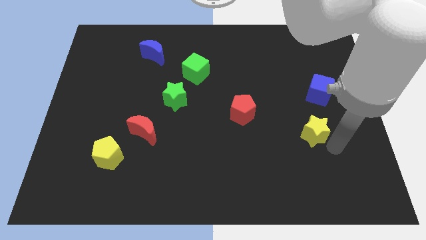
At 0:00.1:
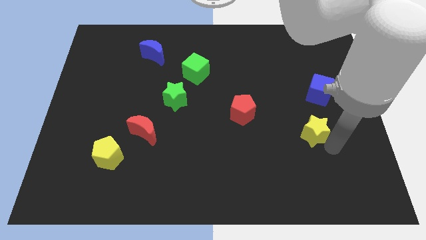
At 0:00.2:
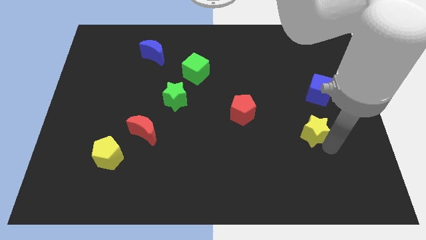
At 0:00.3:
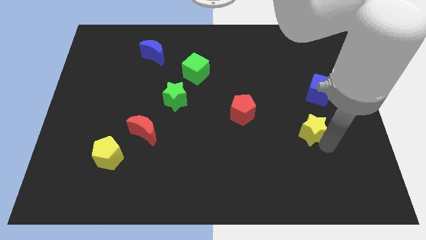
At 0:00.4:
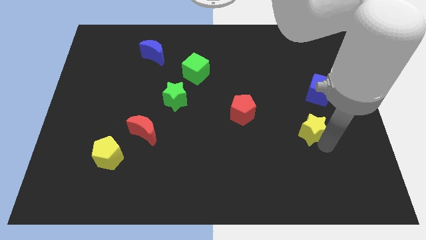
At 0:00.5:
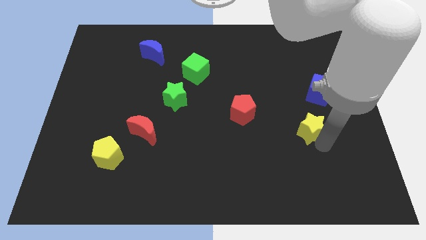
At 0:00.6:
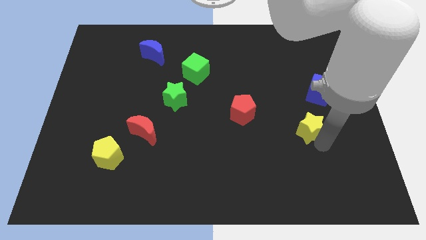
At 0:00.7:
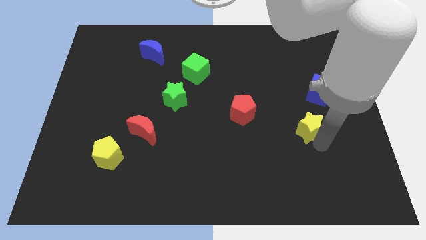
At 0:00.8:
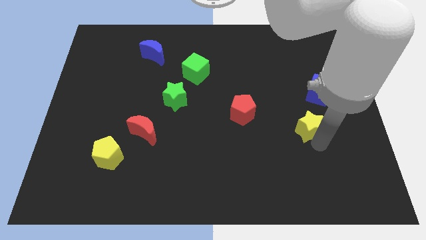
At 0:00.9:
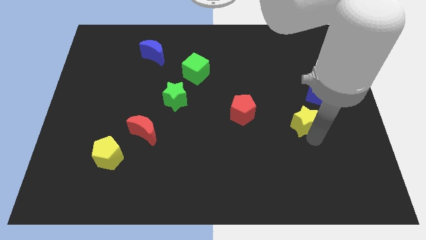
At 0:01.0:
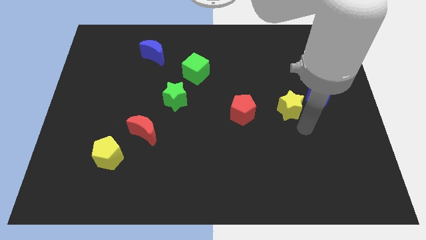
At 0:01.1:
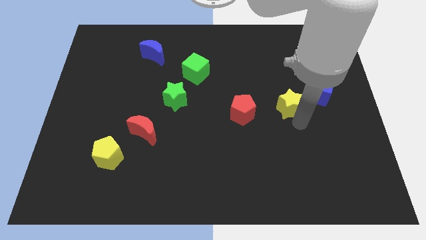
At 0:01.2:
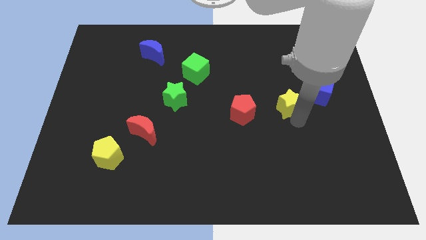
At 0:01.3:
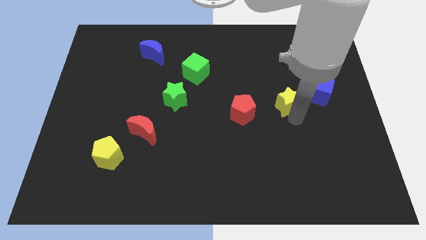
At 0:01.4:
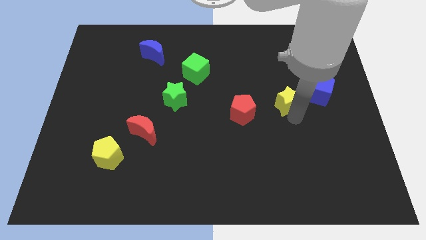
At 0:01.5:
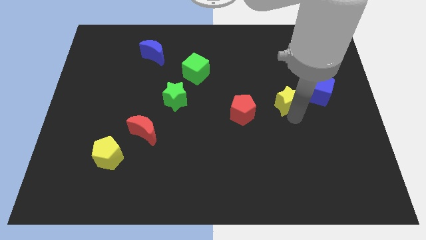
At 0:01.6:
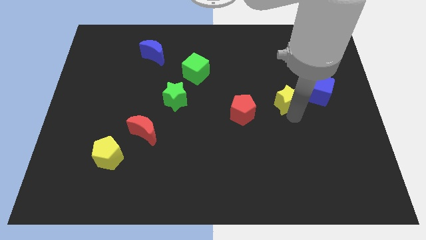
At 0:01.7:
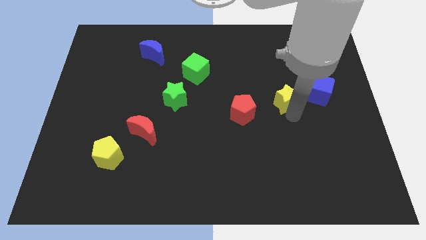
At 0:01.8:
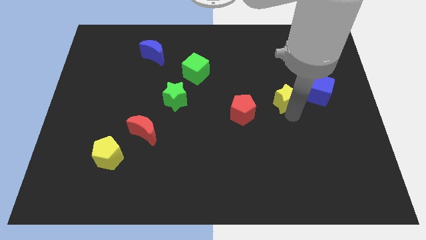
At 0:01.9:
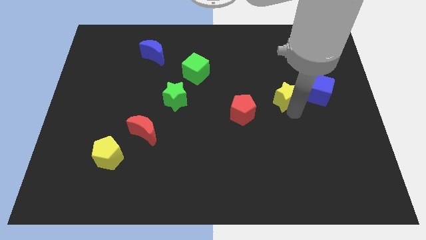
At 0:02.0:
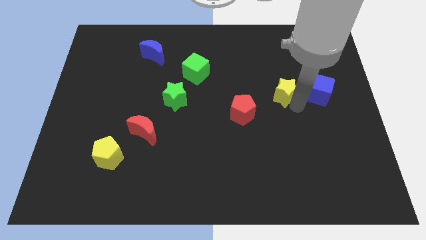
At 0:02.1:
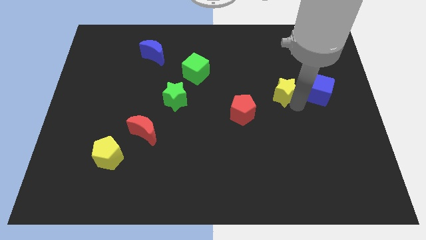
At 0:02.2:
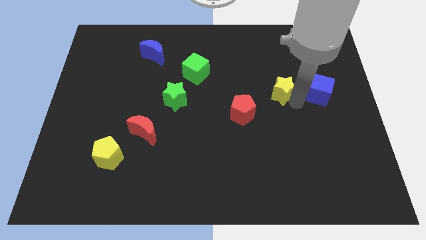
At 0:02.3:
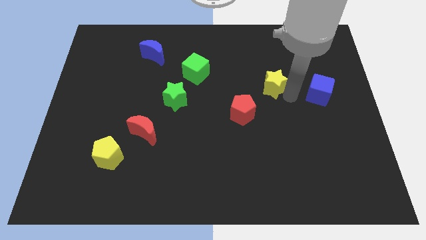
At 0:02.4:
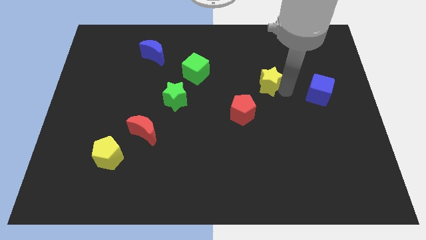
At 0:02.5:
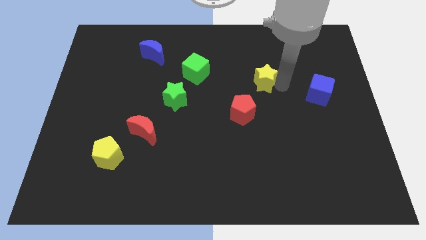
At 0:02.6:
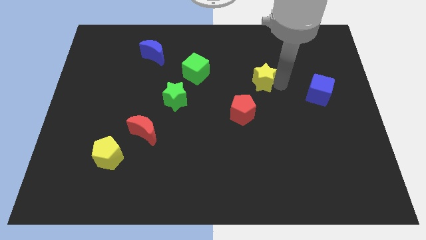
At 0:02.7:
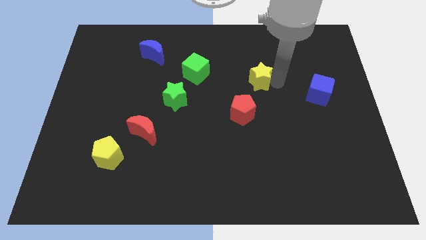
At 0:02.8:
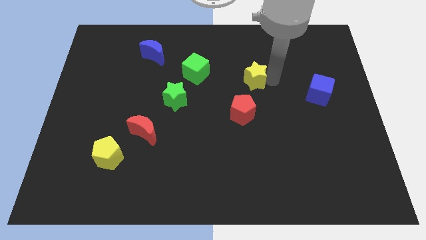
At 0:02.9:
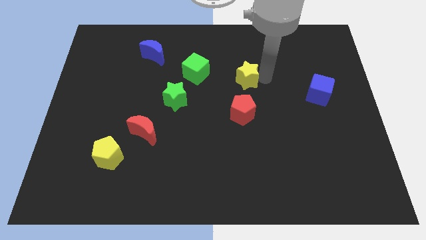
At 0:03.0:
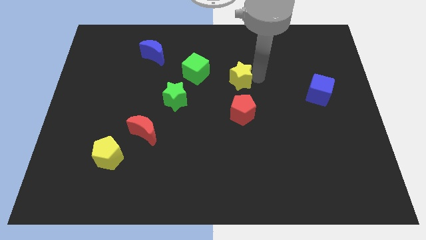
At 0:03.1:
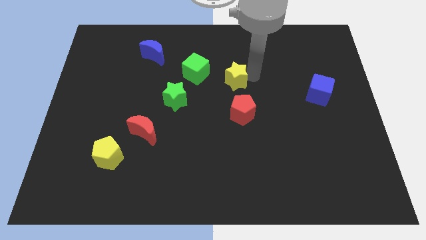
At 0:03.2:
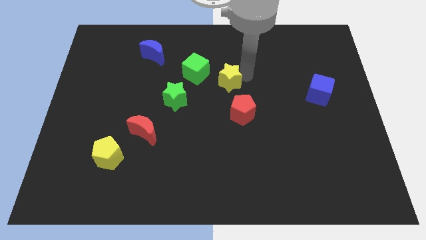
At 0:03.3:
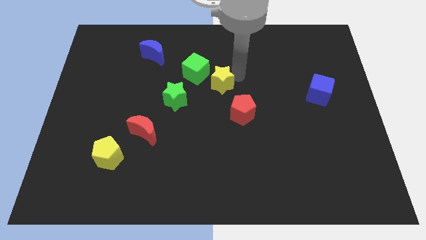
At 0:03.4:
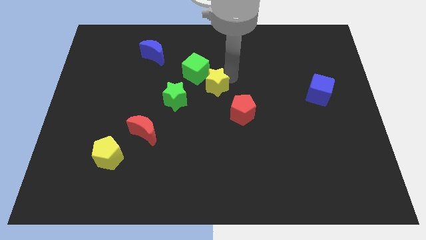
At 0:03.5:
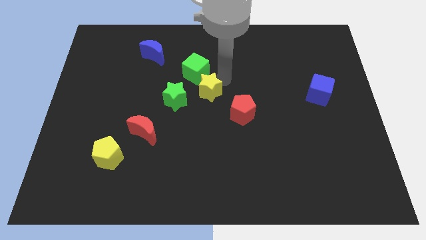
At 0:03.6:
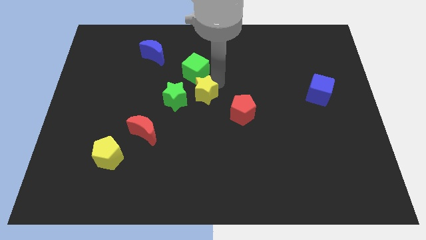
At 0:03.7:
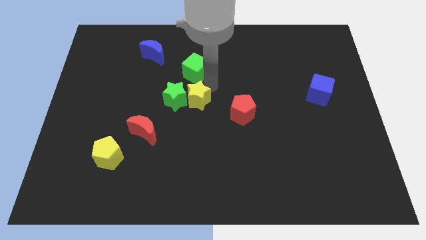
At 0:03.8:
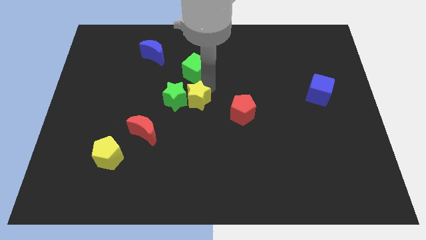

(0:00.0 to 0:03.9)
place the yellow star below the green cube

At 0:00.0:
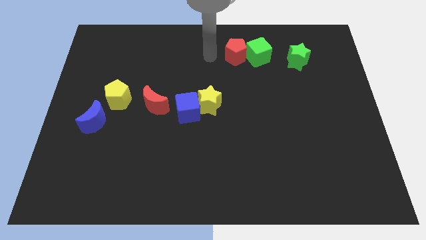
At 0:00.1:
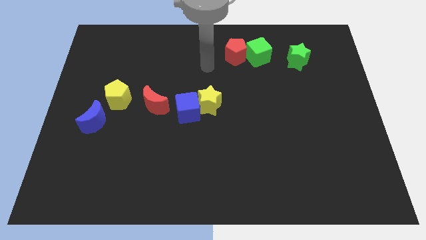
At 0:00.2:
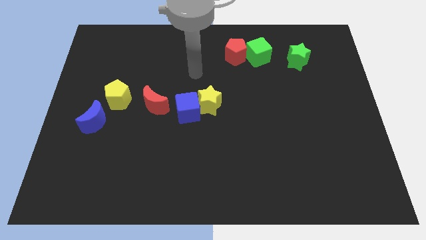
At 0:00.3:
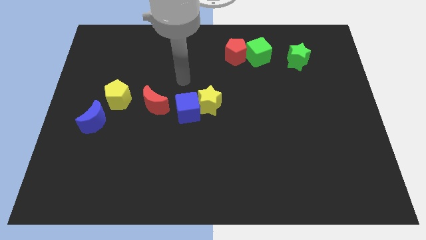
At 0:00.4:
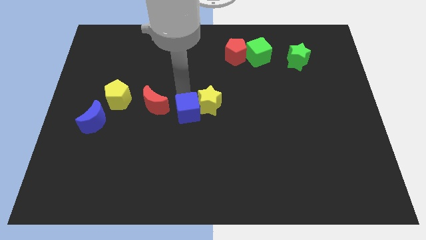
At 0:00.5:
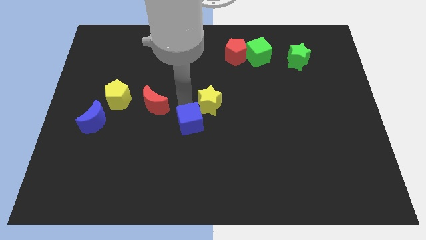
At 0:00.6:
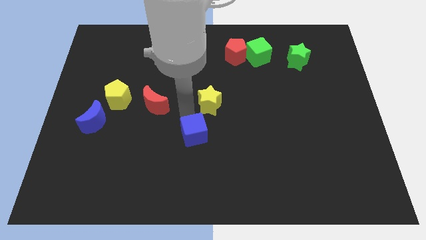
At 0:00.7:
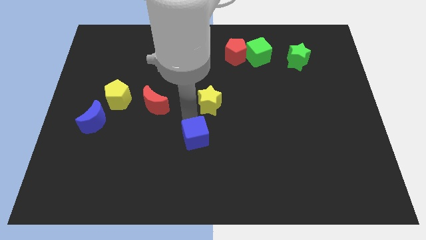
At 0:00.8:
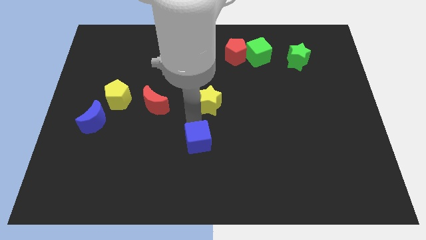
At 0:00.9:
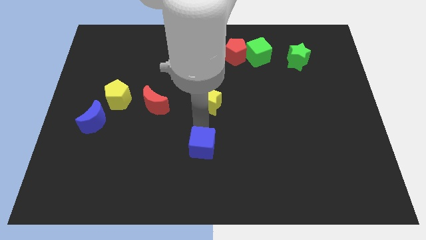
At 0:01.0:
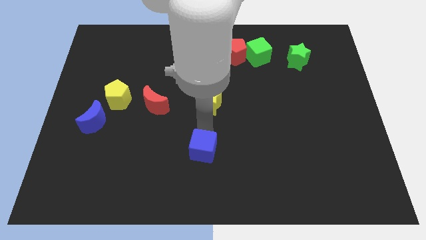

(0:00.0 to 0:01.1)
push the blue cube to the bottom of the yellow star

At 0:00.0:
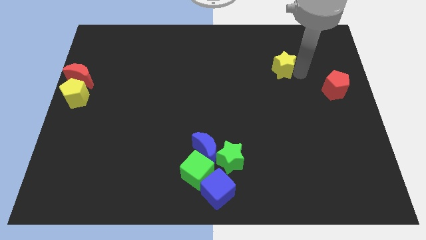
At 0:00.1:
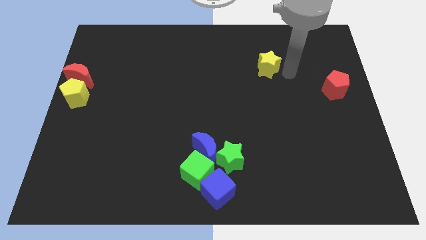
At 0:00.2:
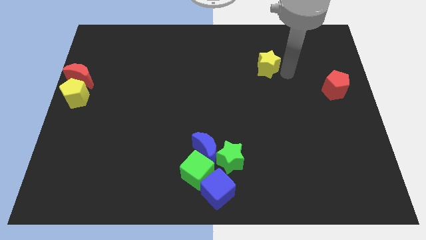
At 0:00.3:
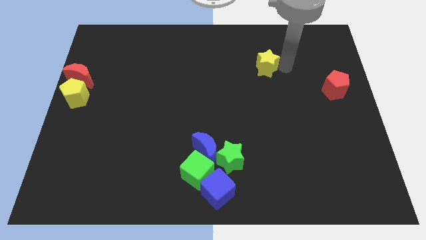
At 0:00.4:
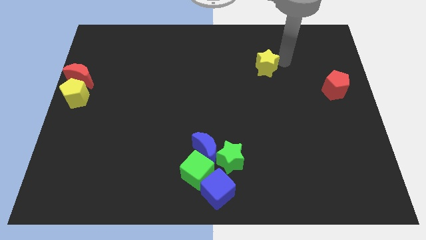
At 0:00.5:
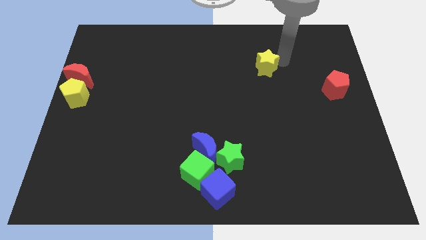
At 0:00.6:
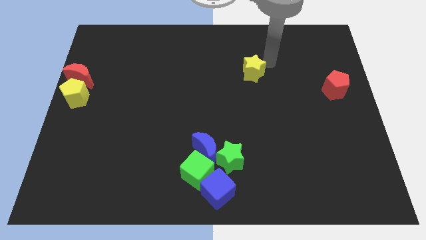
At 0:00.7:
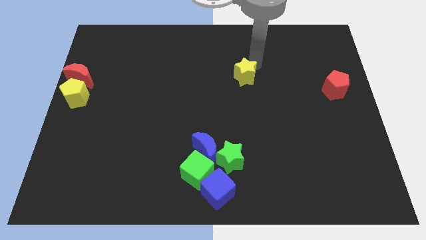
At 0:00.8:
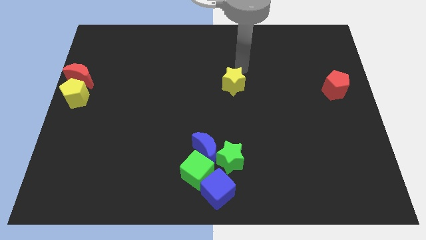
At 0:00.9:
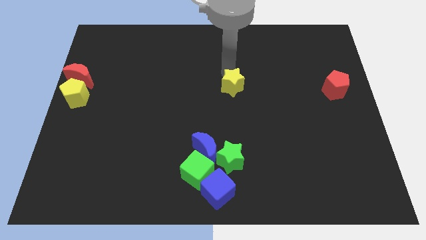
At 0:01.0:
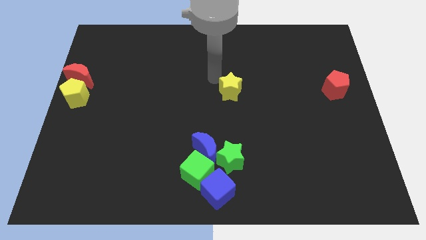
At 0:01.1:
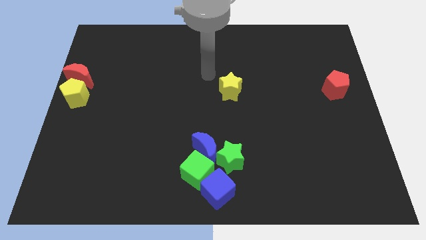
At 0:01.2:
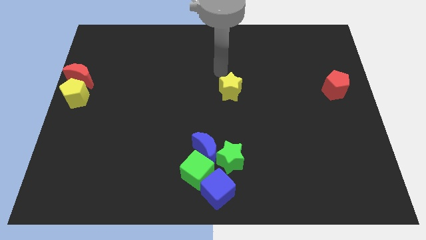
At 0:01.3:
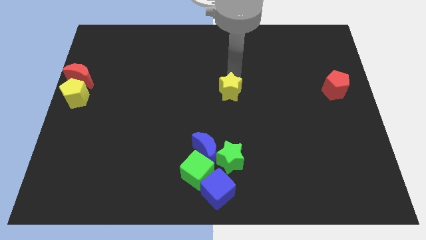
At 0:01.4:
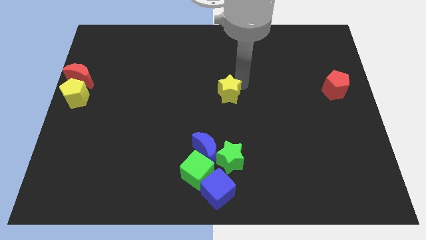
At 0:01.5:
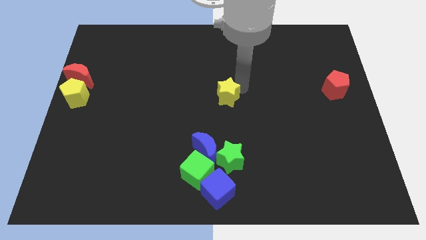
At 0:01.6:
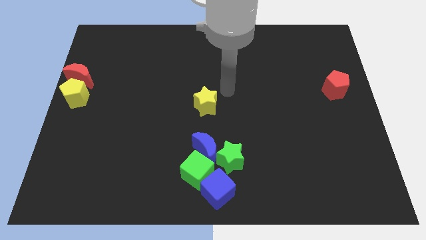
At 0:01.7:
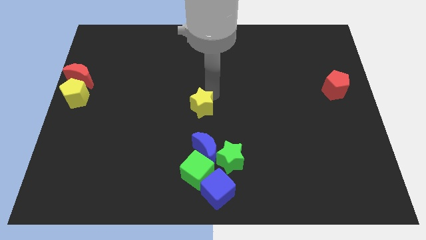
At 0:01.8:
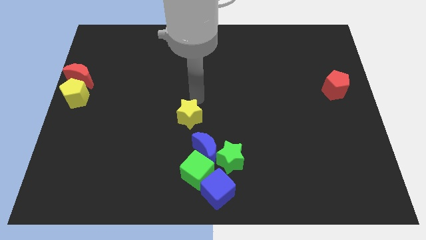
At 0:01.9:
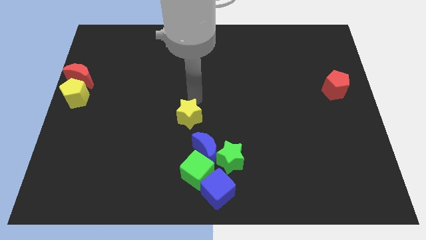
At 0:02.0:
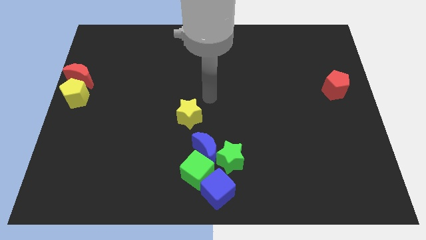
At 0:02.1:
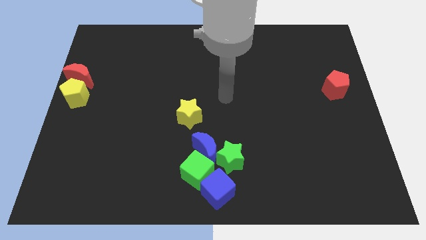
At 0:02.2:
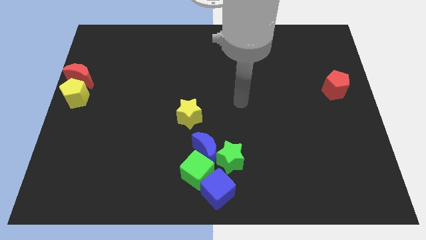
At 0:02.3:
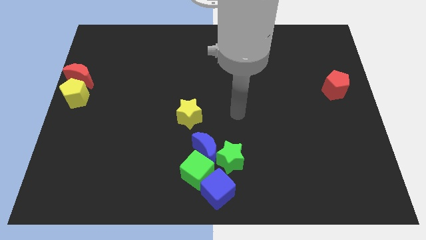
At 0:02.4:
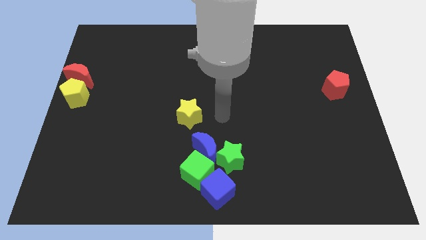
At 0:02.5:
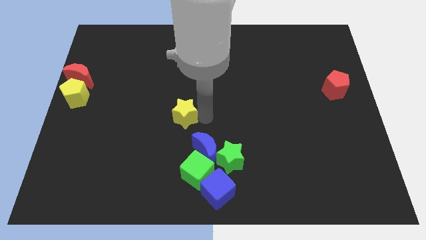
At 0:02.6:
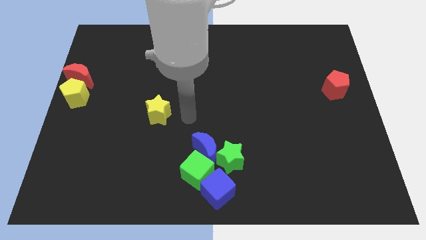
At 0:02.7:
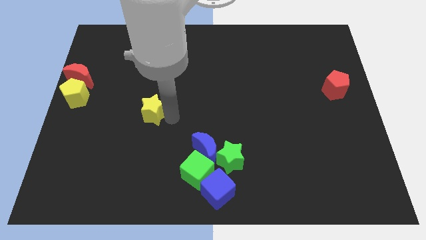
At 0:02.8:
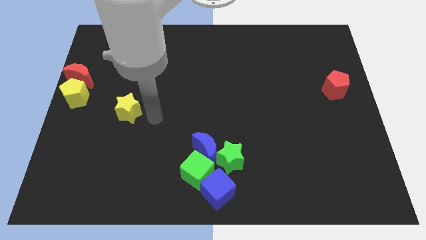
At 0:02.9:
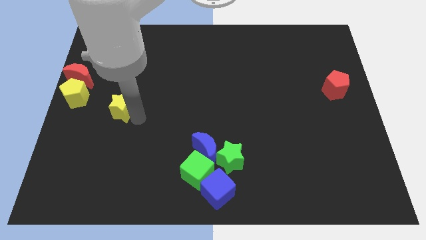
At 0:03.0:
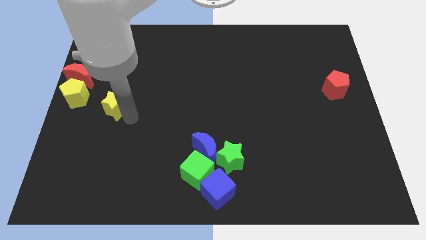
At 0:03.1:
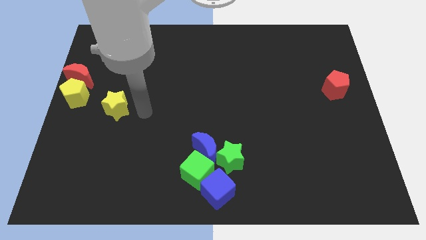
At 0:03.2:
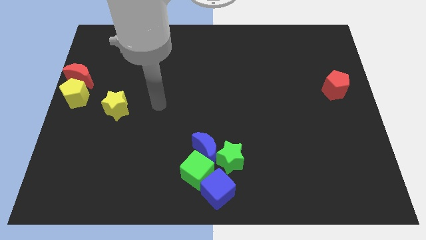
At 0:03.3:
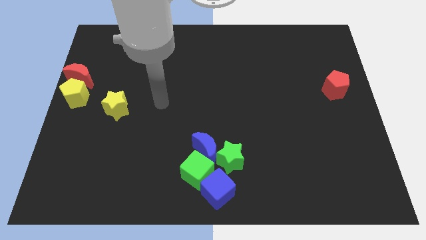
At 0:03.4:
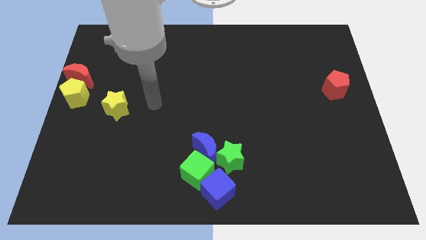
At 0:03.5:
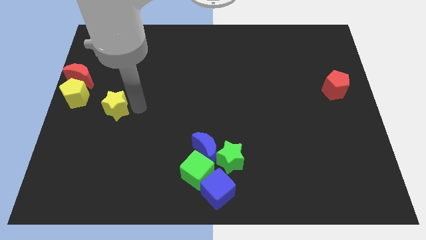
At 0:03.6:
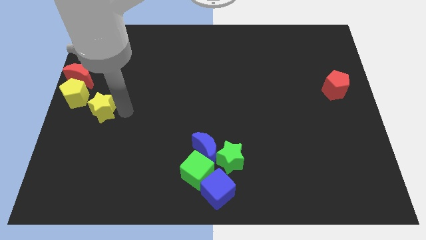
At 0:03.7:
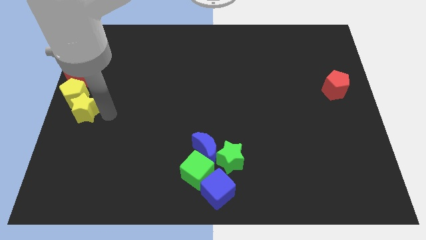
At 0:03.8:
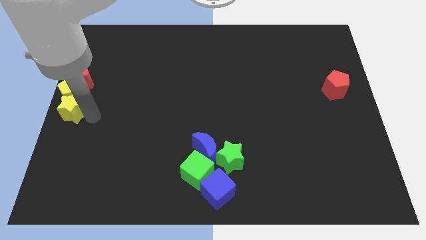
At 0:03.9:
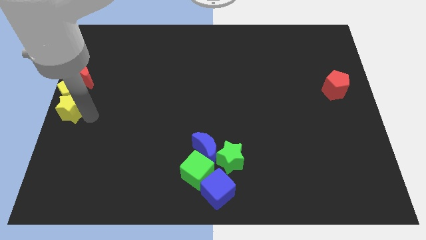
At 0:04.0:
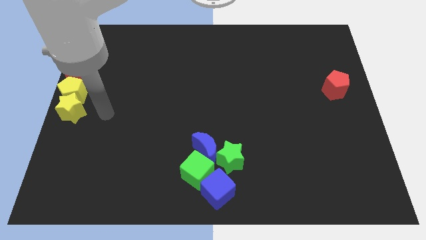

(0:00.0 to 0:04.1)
push the yellow star below to the yellow pentagon
